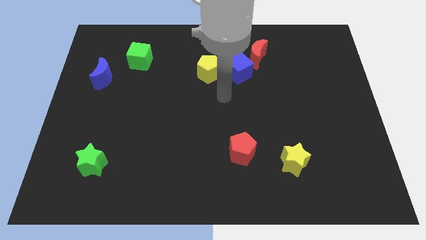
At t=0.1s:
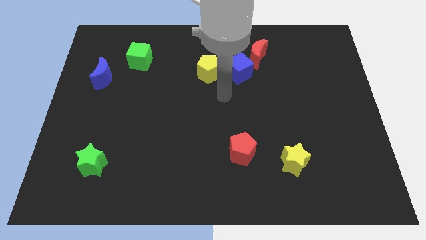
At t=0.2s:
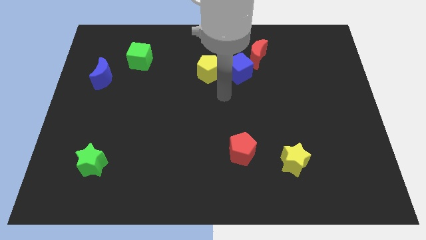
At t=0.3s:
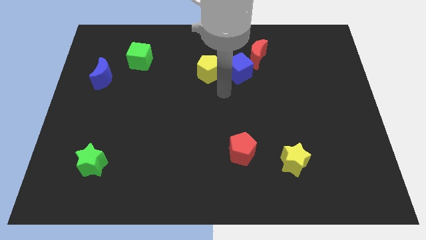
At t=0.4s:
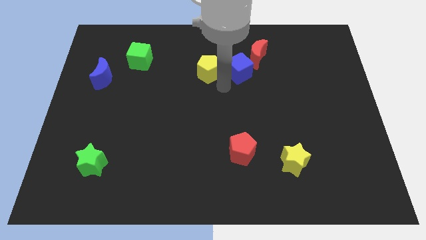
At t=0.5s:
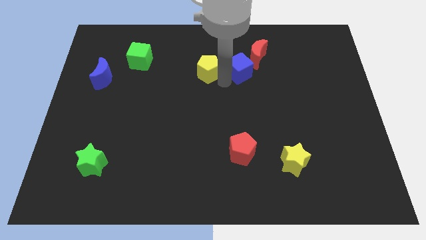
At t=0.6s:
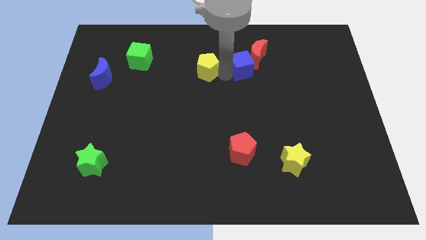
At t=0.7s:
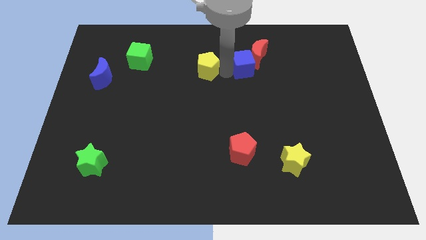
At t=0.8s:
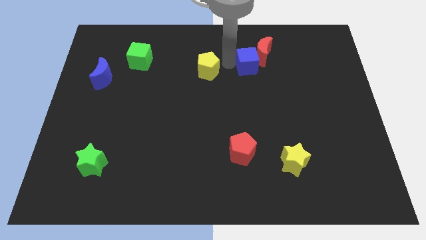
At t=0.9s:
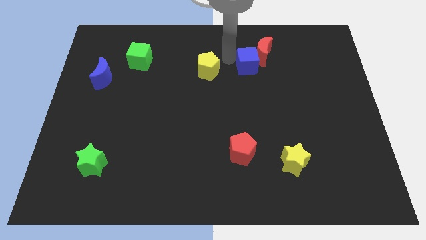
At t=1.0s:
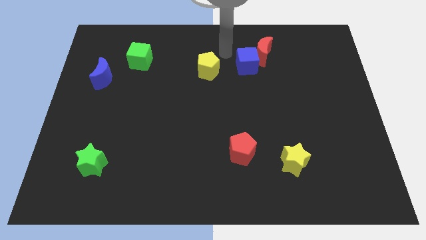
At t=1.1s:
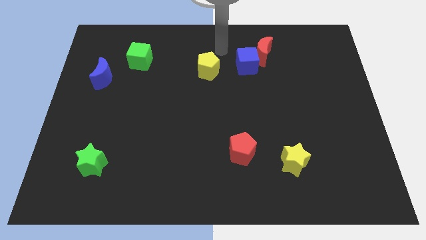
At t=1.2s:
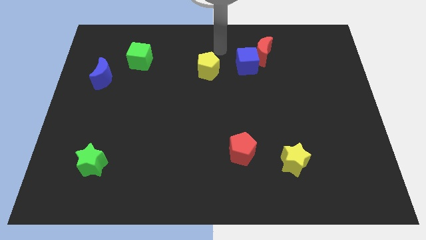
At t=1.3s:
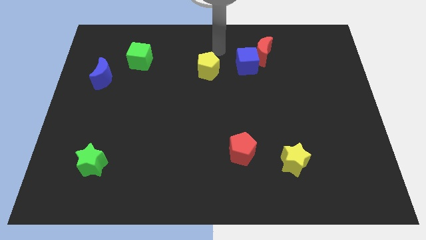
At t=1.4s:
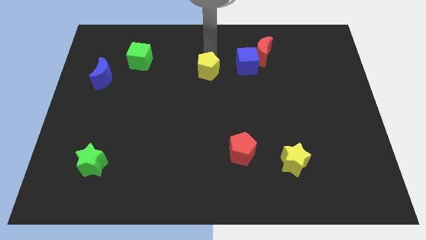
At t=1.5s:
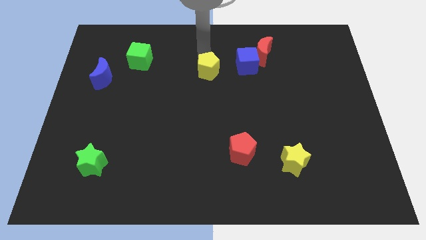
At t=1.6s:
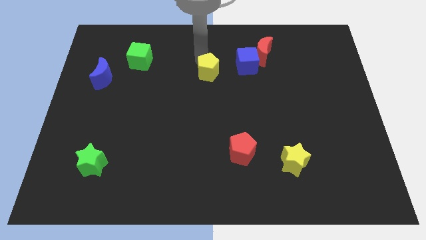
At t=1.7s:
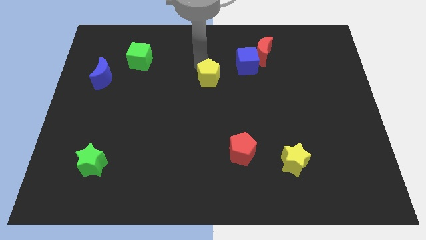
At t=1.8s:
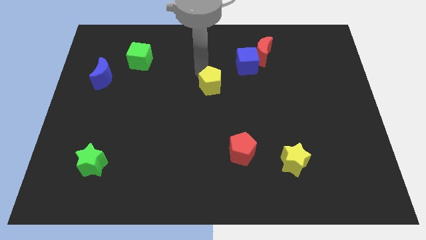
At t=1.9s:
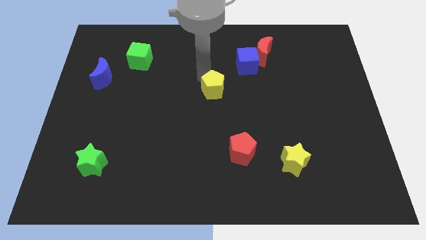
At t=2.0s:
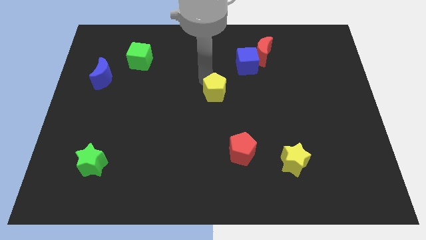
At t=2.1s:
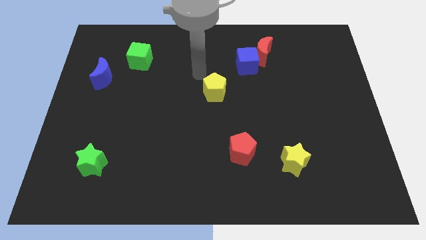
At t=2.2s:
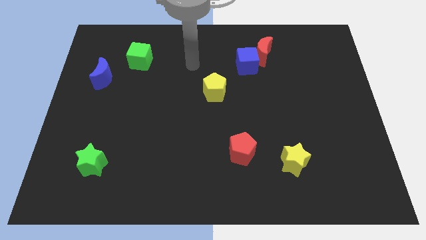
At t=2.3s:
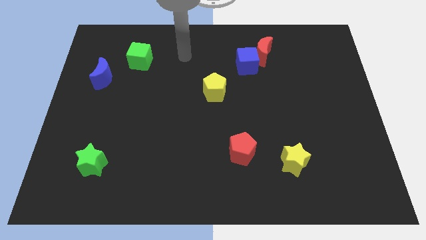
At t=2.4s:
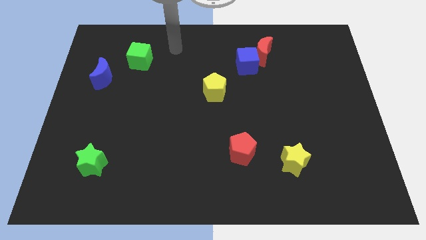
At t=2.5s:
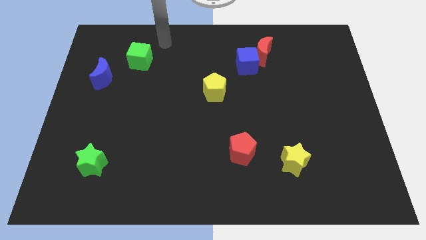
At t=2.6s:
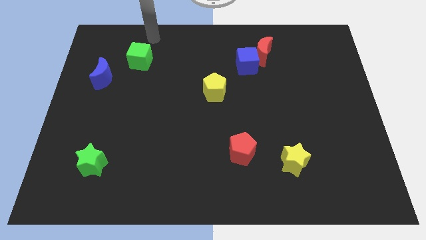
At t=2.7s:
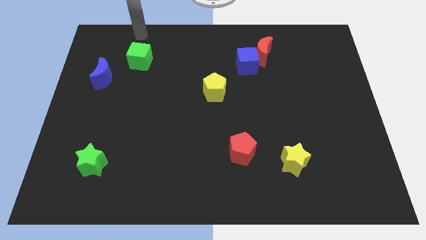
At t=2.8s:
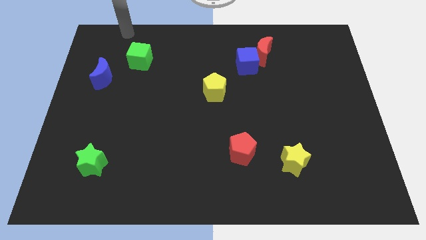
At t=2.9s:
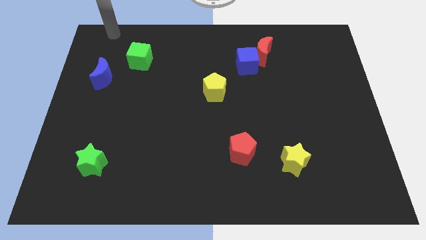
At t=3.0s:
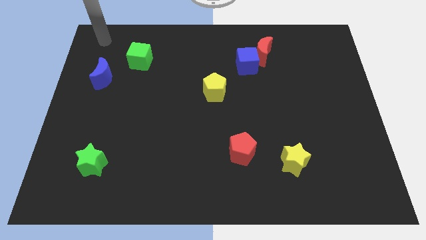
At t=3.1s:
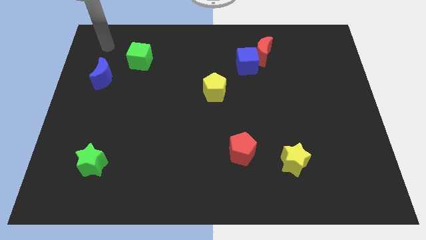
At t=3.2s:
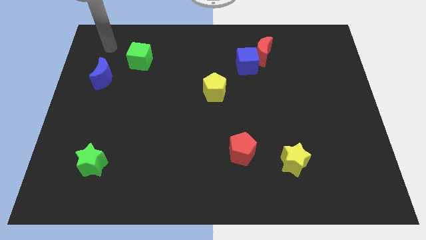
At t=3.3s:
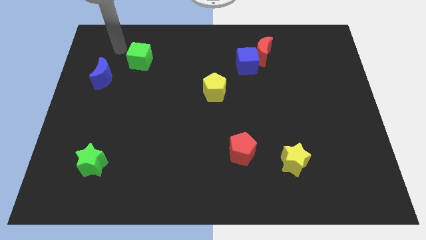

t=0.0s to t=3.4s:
place the yellow pentagon parallel to the blue moon

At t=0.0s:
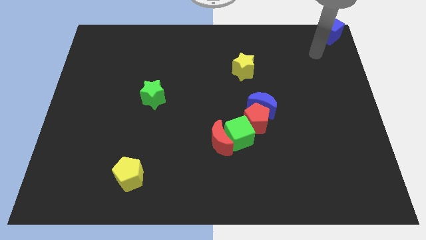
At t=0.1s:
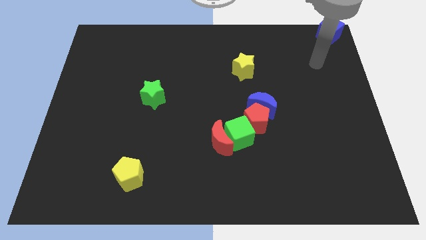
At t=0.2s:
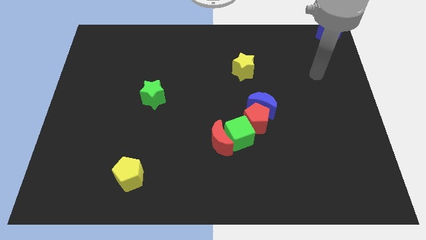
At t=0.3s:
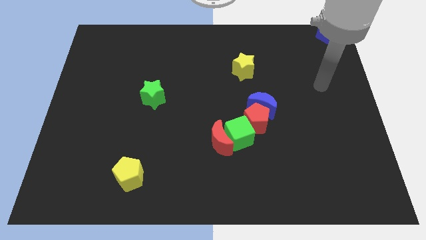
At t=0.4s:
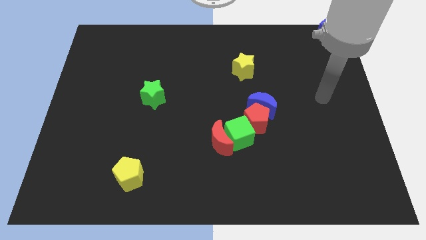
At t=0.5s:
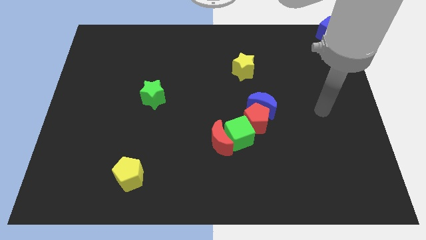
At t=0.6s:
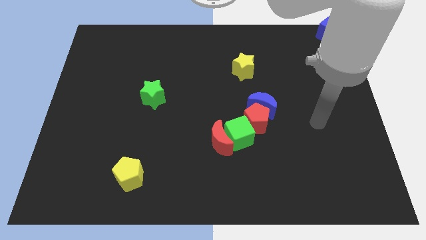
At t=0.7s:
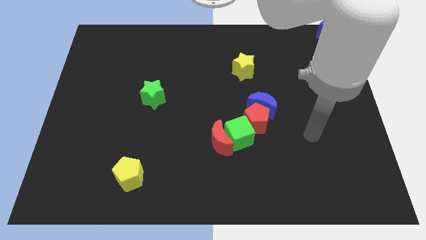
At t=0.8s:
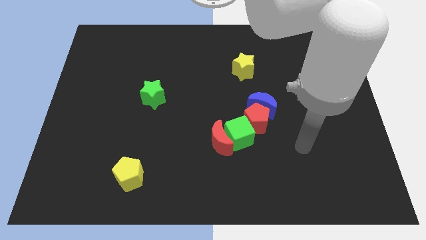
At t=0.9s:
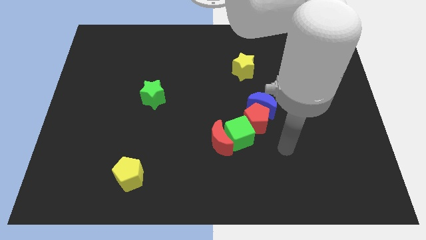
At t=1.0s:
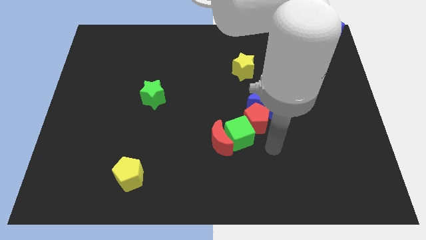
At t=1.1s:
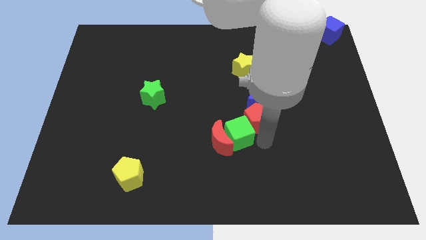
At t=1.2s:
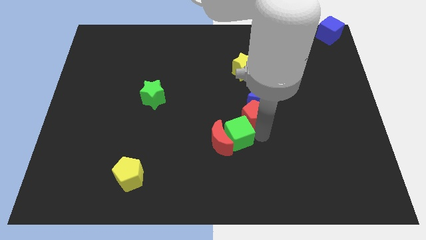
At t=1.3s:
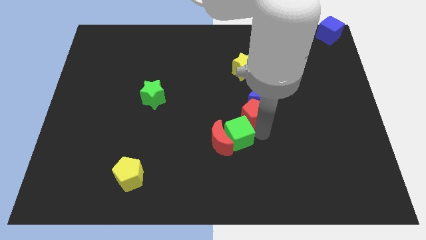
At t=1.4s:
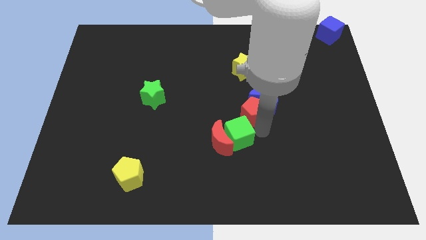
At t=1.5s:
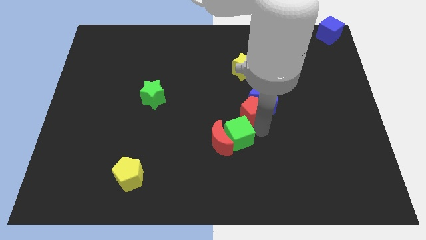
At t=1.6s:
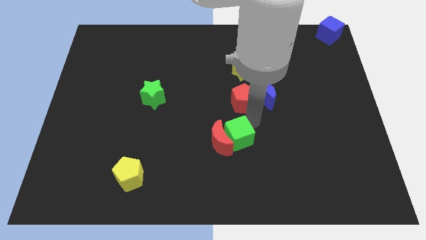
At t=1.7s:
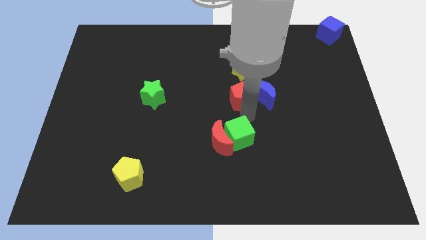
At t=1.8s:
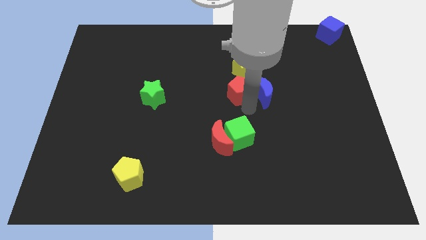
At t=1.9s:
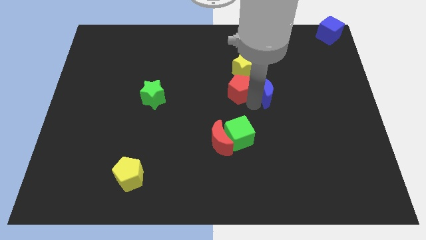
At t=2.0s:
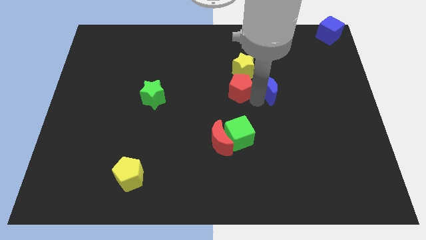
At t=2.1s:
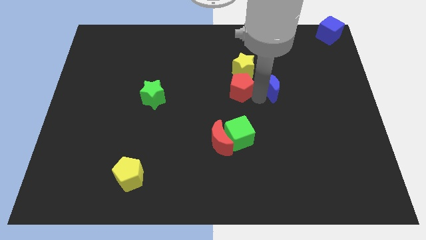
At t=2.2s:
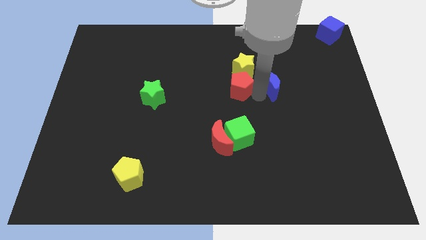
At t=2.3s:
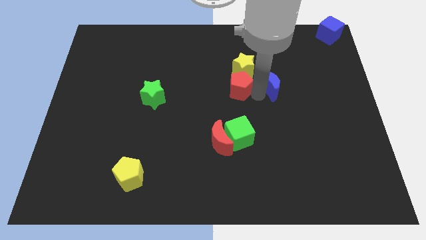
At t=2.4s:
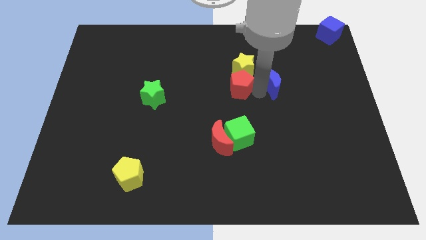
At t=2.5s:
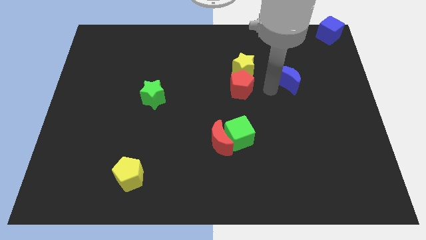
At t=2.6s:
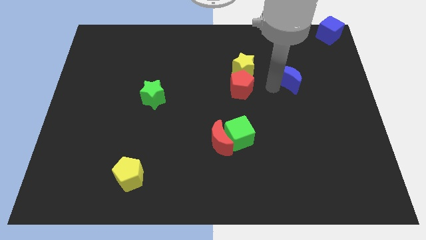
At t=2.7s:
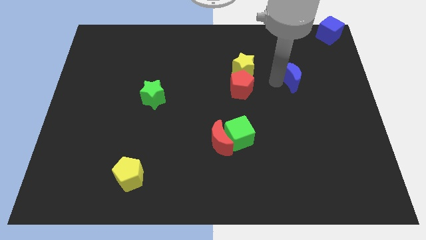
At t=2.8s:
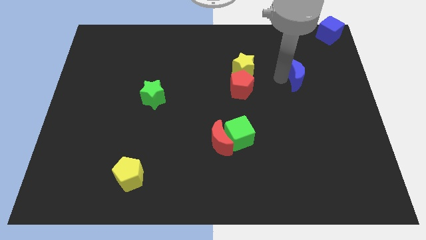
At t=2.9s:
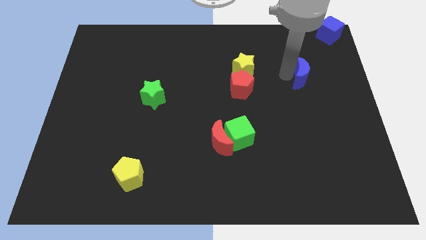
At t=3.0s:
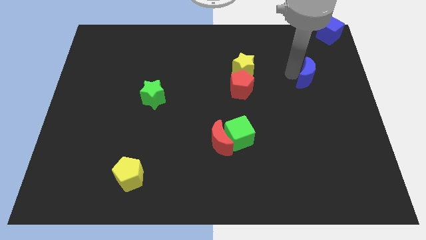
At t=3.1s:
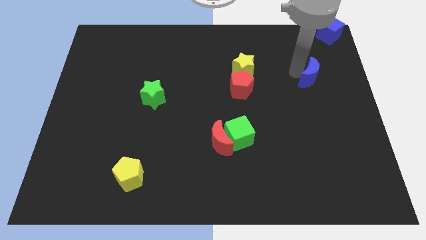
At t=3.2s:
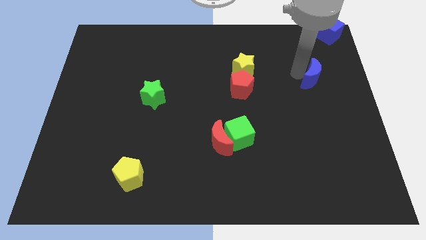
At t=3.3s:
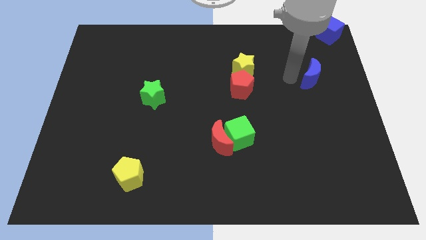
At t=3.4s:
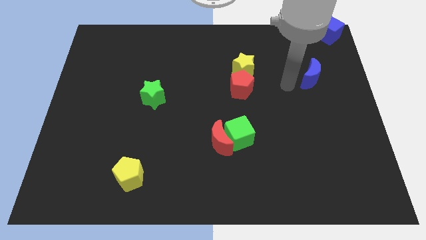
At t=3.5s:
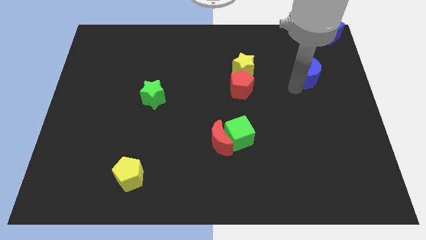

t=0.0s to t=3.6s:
separate the blue crescent from red pentagon

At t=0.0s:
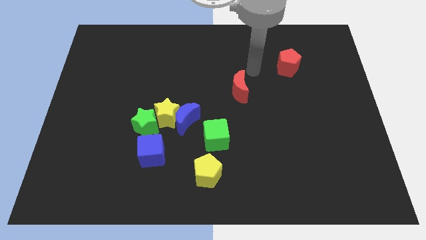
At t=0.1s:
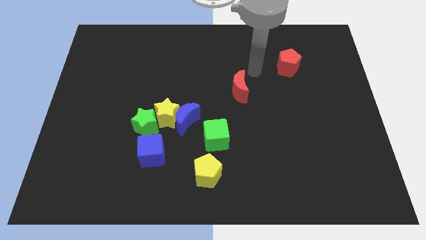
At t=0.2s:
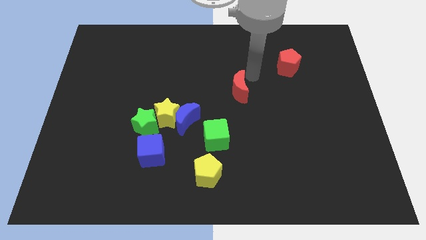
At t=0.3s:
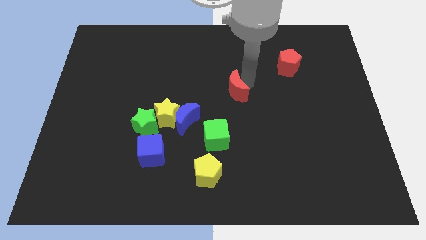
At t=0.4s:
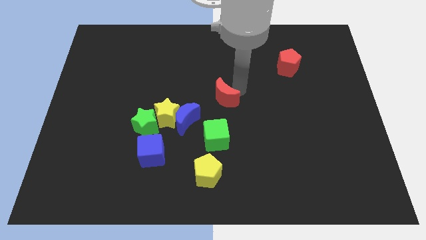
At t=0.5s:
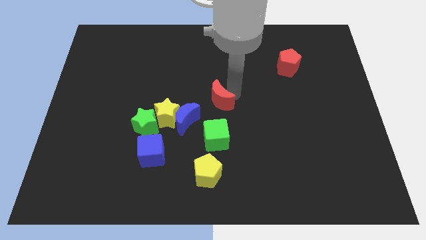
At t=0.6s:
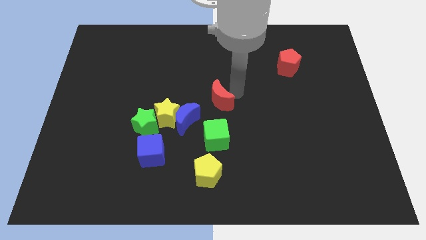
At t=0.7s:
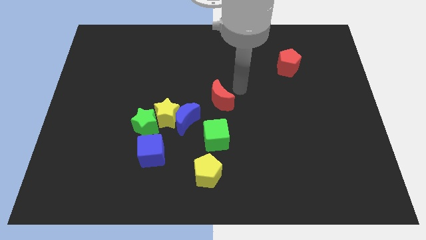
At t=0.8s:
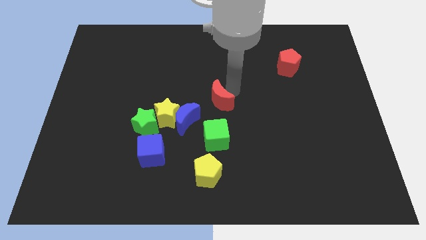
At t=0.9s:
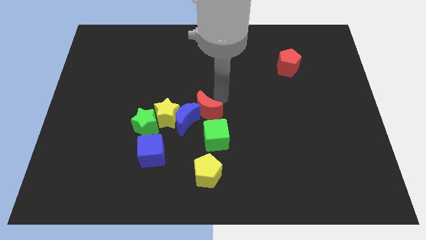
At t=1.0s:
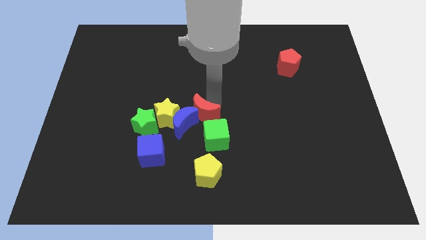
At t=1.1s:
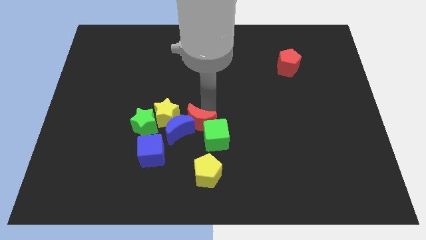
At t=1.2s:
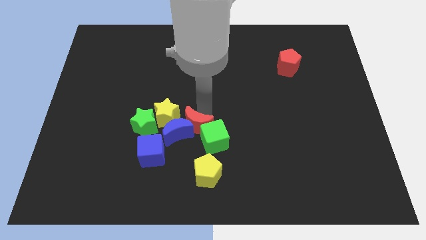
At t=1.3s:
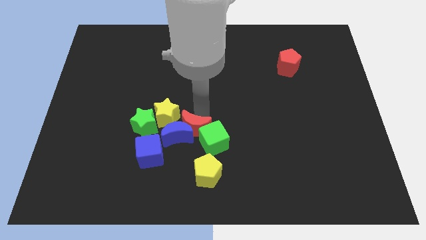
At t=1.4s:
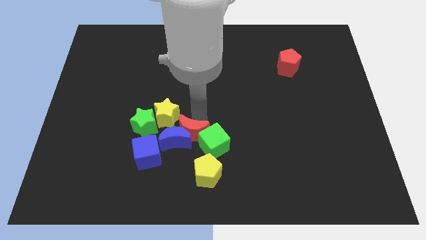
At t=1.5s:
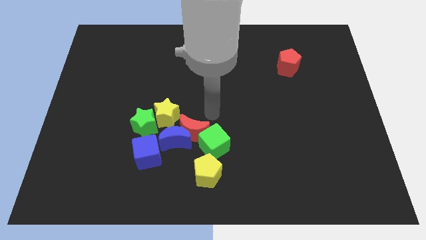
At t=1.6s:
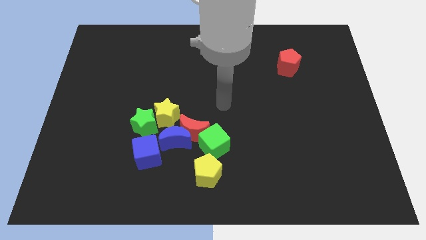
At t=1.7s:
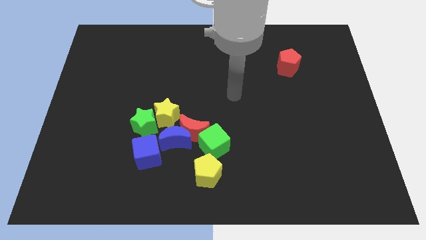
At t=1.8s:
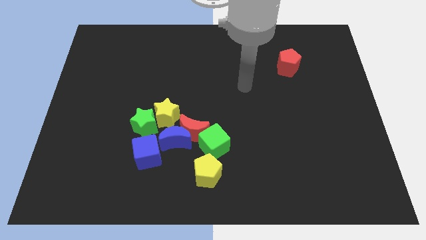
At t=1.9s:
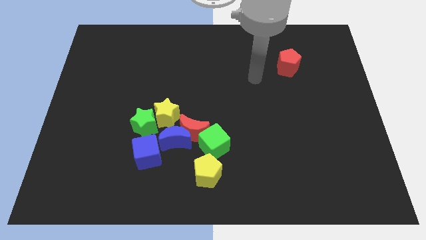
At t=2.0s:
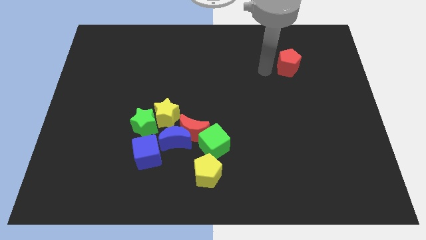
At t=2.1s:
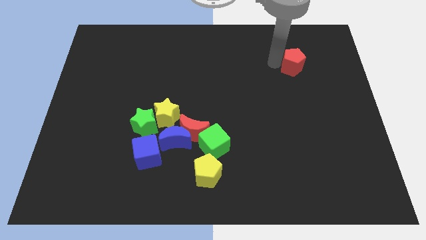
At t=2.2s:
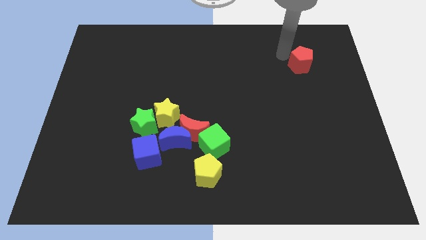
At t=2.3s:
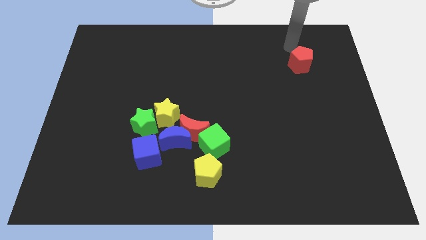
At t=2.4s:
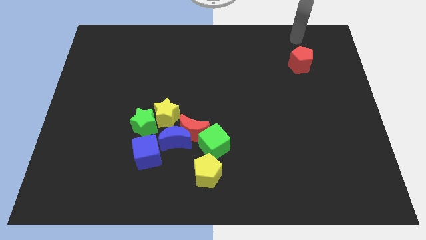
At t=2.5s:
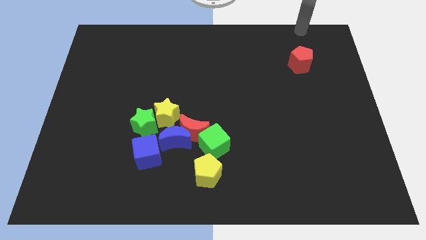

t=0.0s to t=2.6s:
push the red moon into the blue moon
